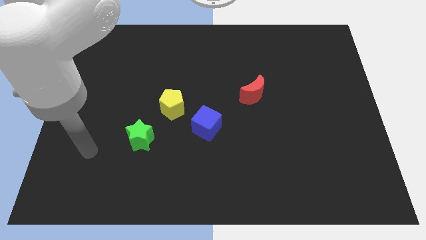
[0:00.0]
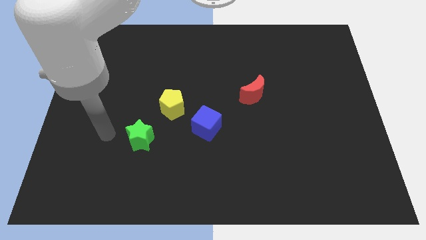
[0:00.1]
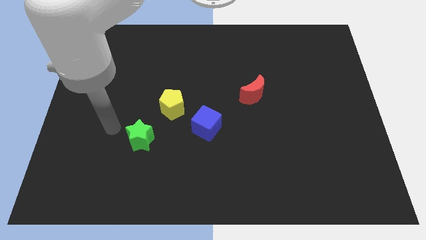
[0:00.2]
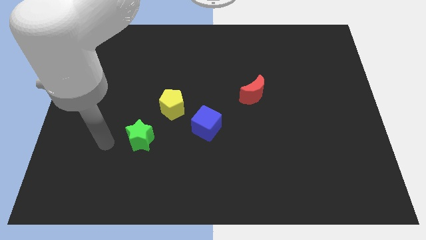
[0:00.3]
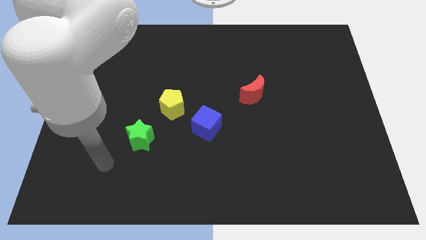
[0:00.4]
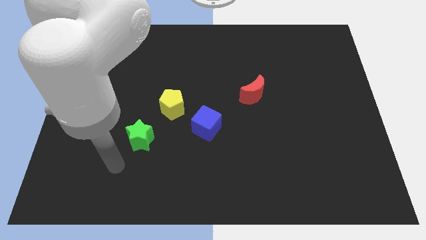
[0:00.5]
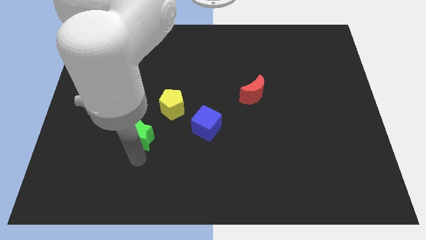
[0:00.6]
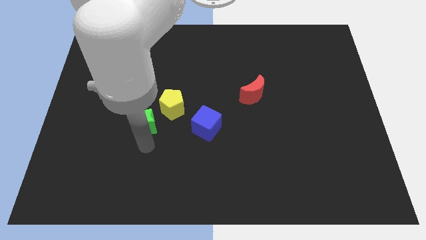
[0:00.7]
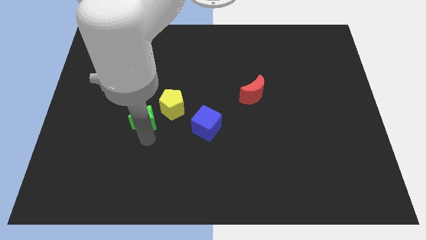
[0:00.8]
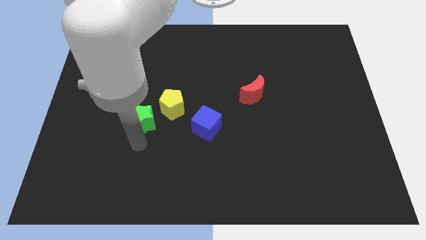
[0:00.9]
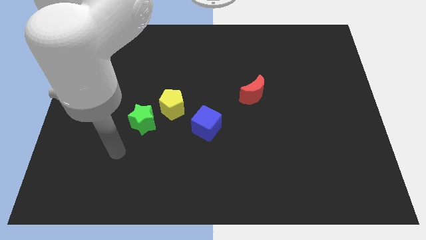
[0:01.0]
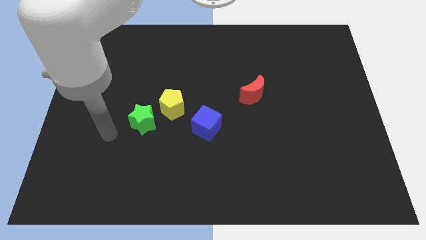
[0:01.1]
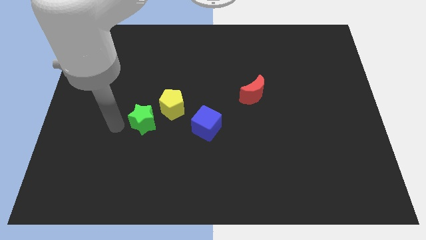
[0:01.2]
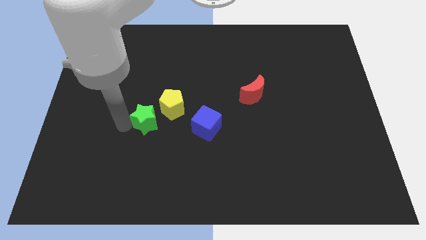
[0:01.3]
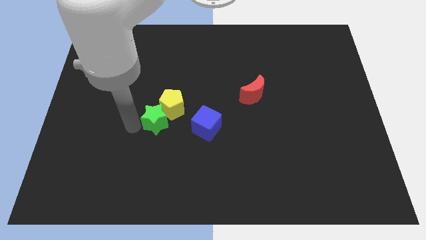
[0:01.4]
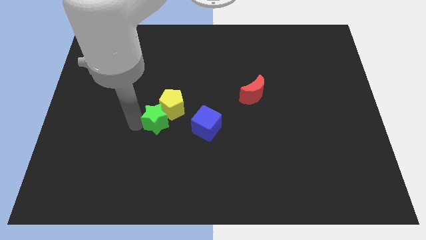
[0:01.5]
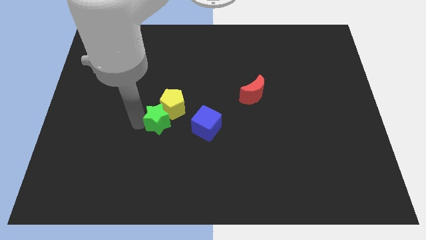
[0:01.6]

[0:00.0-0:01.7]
put the green block close to the pentagon

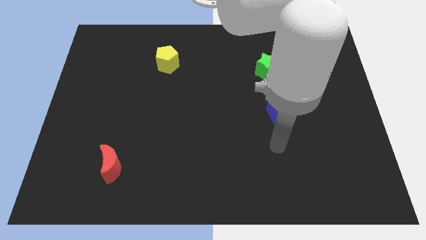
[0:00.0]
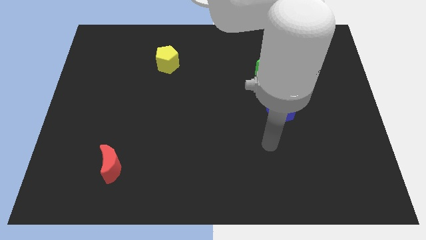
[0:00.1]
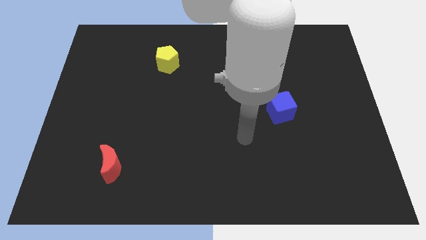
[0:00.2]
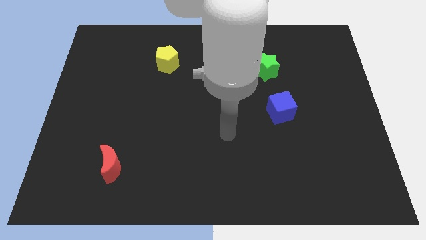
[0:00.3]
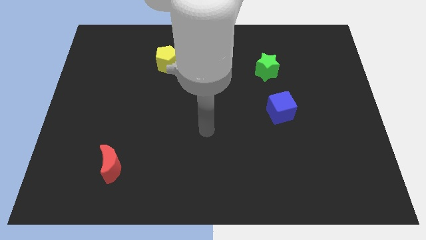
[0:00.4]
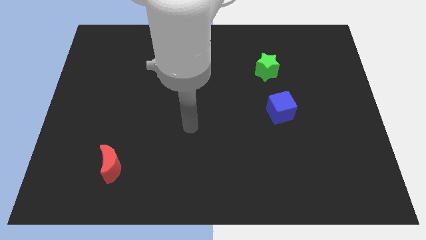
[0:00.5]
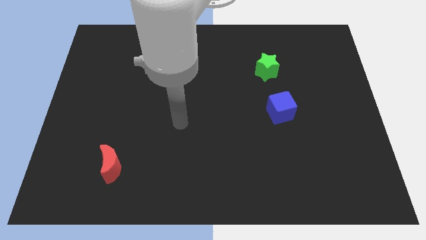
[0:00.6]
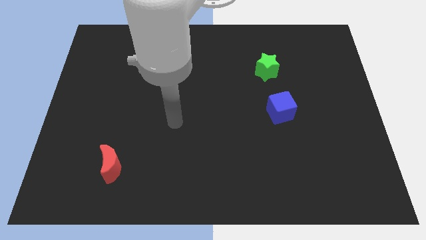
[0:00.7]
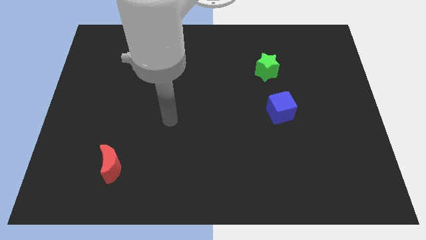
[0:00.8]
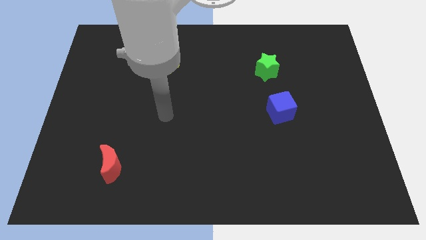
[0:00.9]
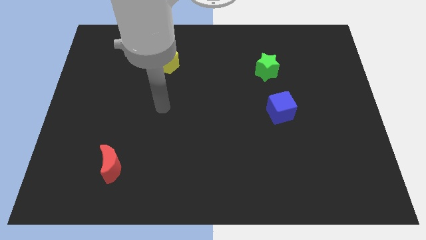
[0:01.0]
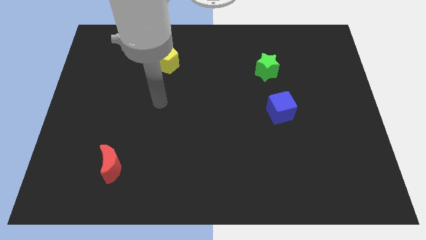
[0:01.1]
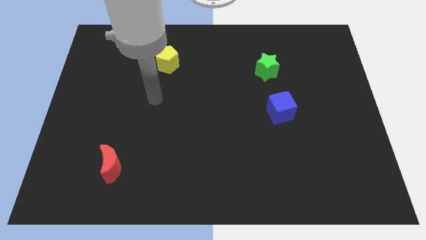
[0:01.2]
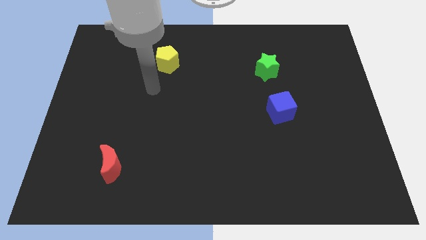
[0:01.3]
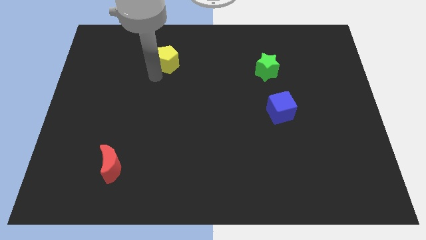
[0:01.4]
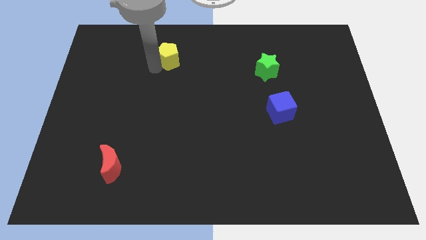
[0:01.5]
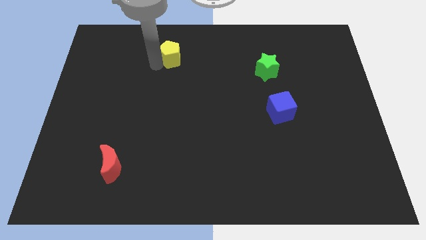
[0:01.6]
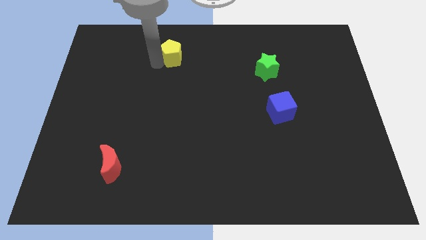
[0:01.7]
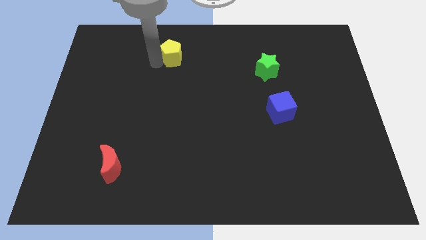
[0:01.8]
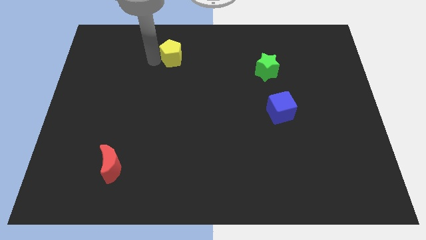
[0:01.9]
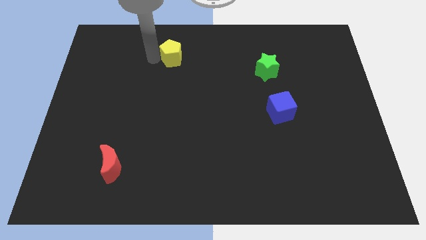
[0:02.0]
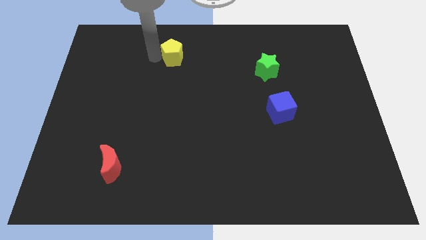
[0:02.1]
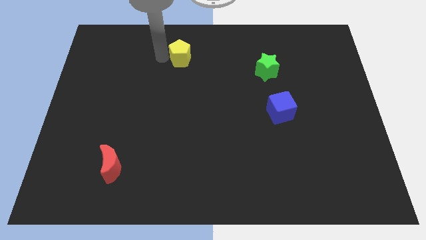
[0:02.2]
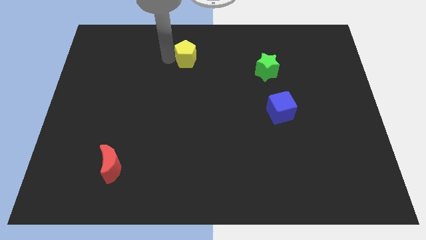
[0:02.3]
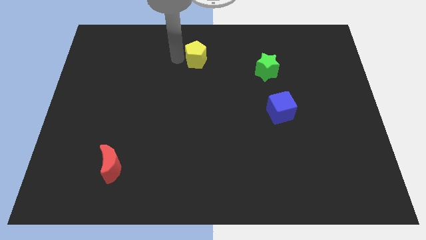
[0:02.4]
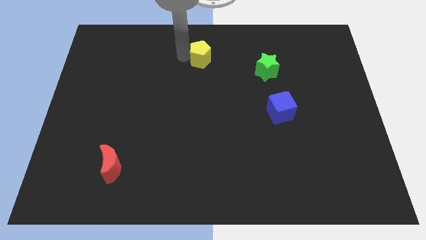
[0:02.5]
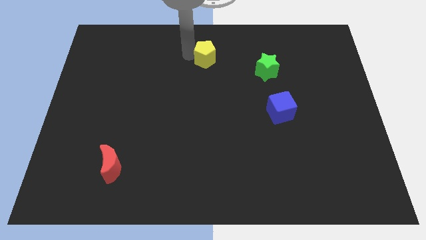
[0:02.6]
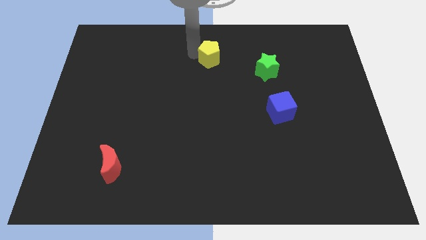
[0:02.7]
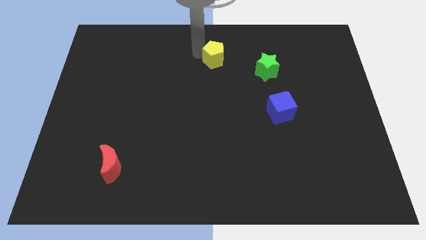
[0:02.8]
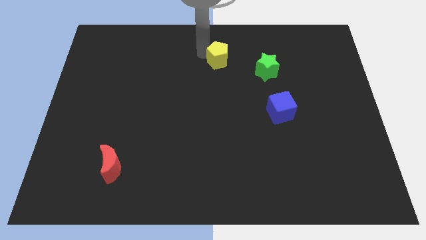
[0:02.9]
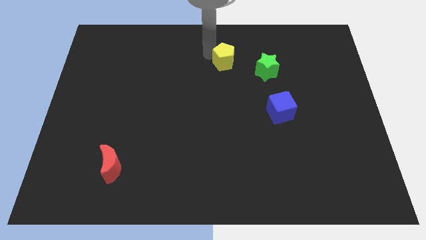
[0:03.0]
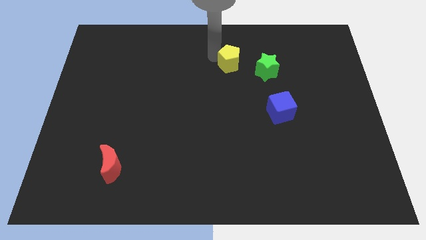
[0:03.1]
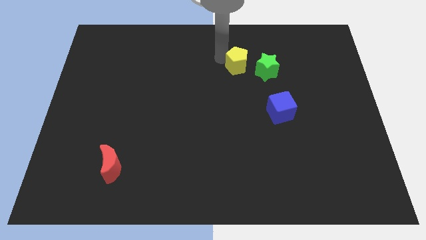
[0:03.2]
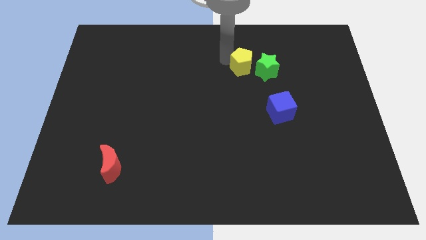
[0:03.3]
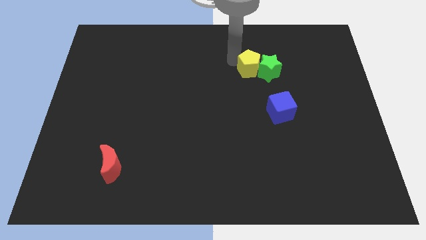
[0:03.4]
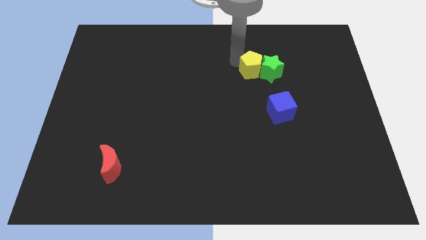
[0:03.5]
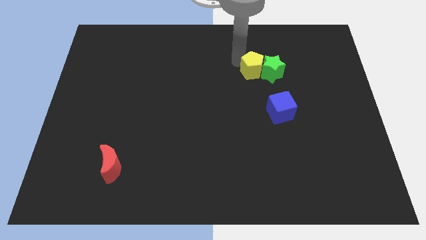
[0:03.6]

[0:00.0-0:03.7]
push the yellow block close to the star

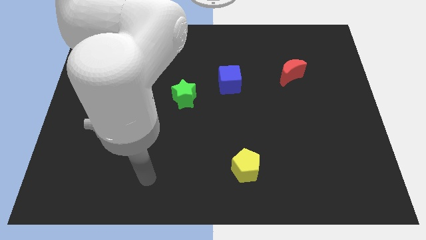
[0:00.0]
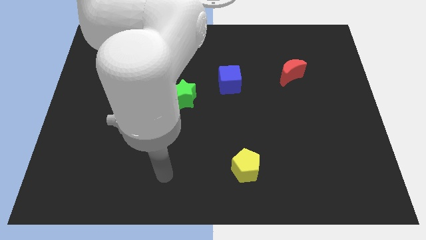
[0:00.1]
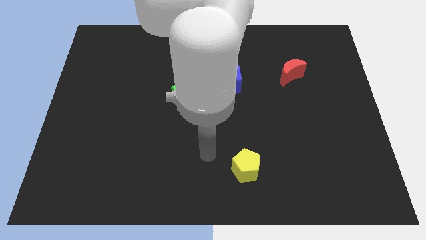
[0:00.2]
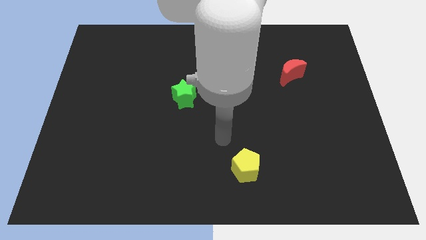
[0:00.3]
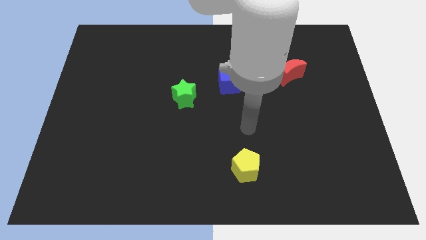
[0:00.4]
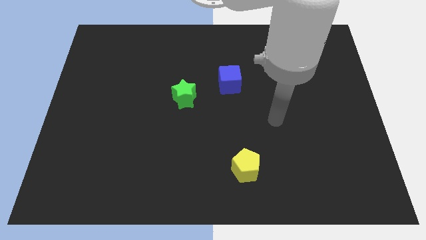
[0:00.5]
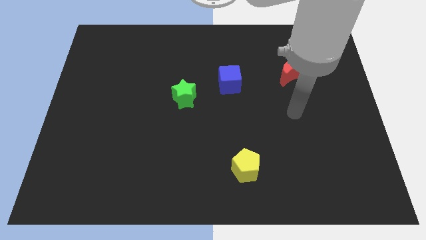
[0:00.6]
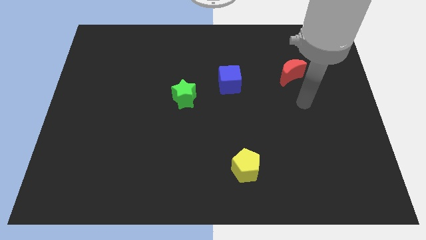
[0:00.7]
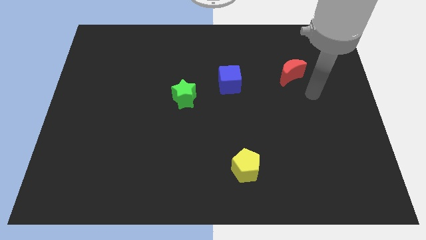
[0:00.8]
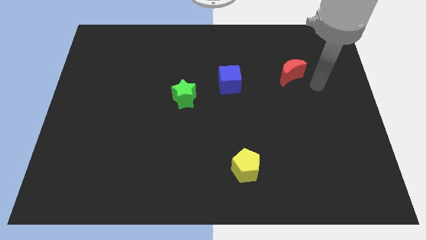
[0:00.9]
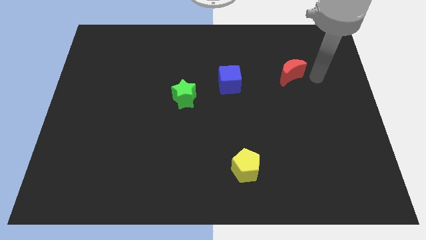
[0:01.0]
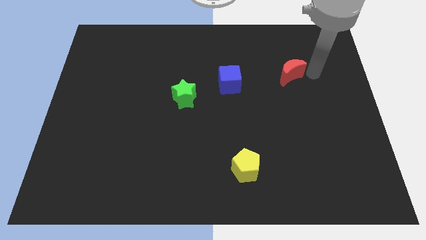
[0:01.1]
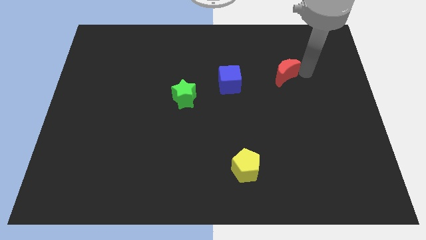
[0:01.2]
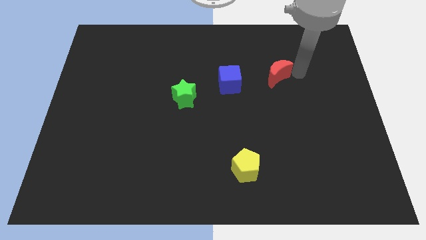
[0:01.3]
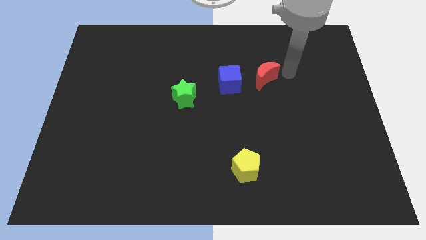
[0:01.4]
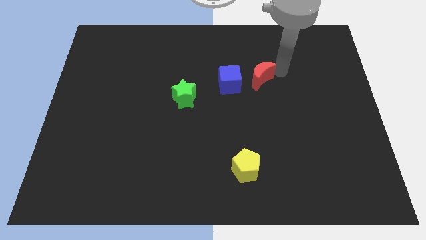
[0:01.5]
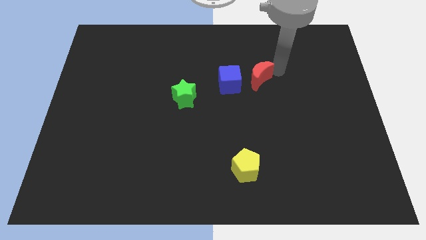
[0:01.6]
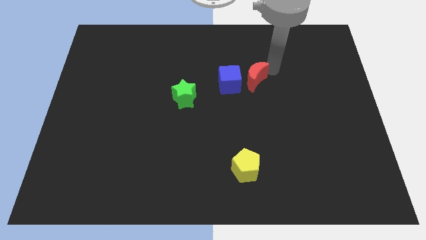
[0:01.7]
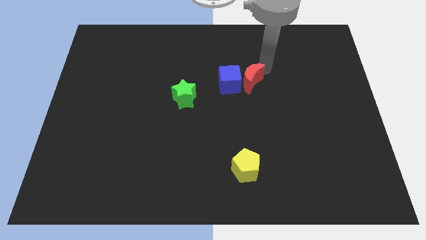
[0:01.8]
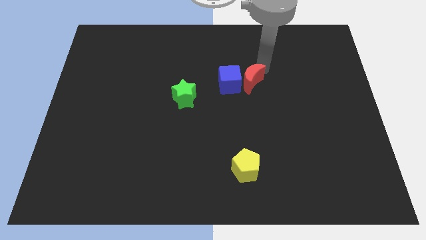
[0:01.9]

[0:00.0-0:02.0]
put the red block close to the blue cube

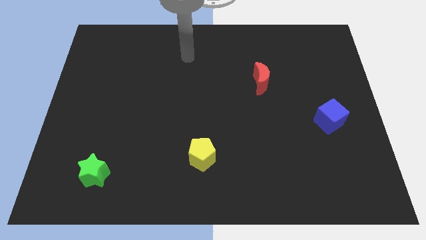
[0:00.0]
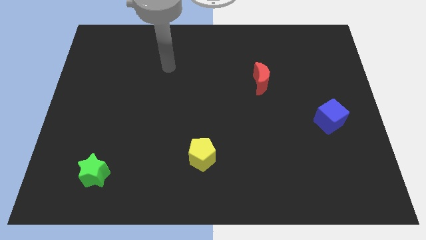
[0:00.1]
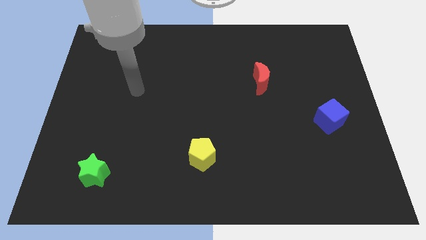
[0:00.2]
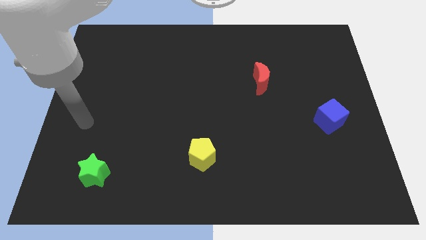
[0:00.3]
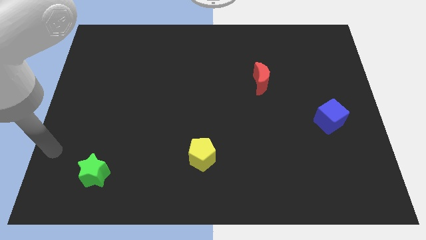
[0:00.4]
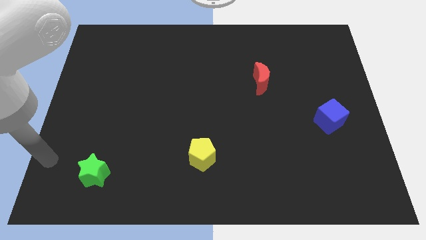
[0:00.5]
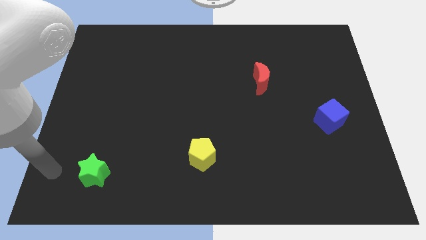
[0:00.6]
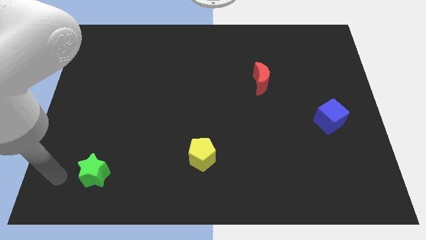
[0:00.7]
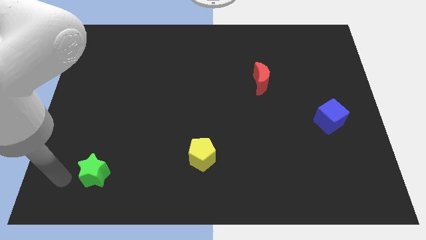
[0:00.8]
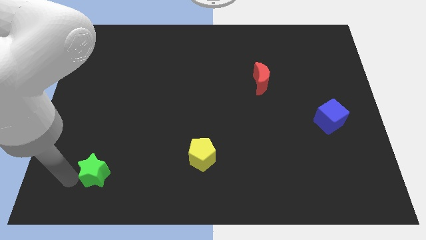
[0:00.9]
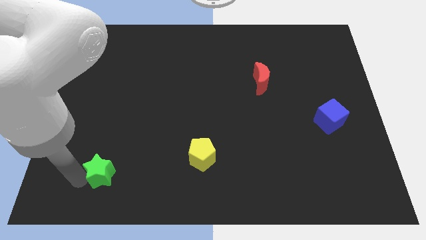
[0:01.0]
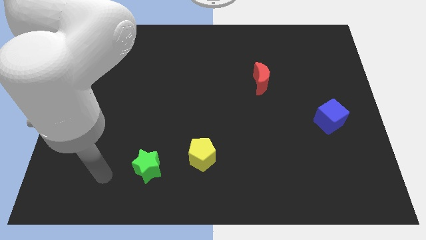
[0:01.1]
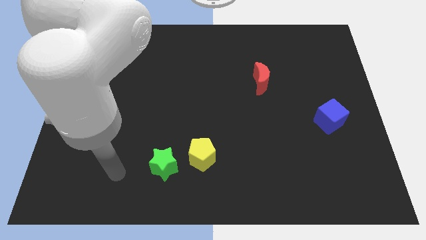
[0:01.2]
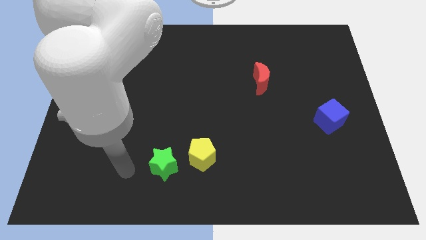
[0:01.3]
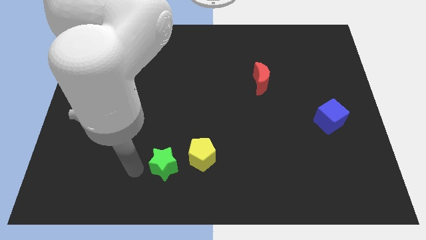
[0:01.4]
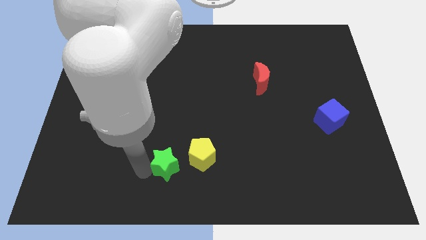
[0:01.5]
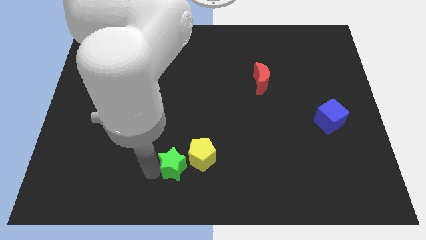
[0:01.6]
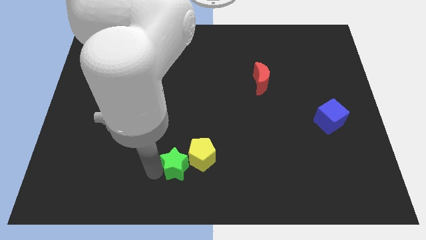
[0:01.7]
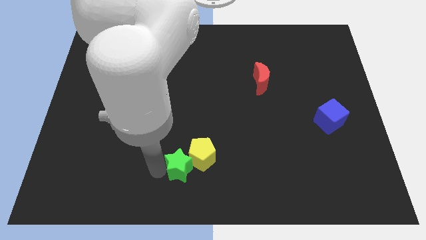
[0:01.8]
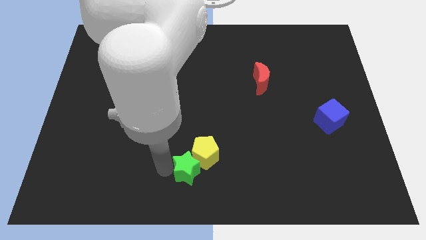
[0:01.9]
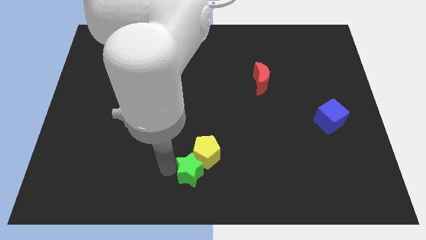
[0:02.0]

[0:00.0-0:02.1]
move the star next to the yellow block
